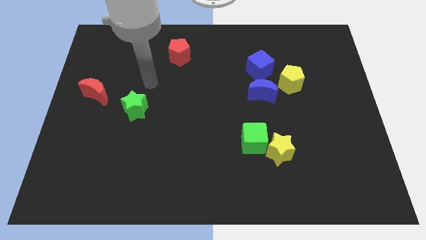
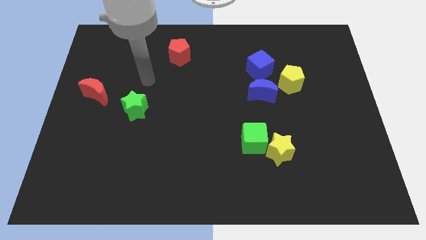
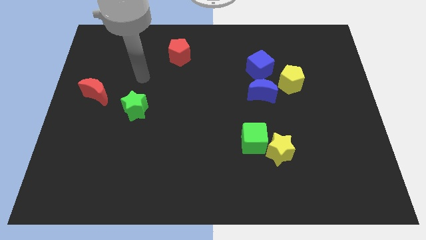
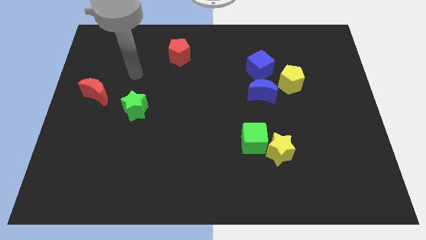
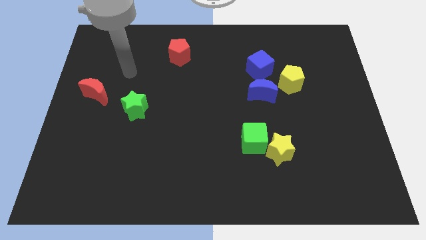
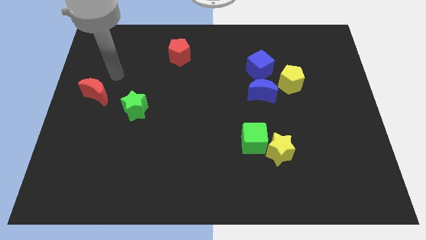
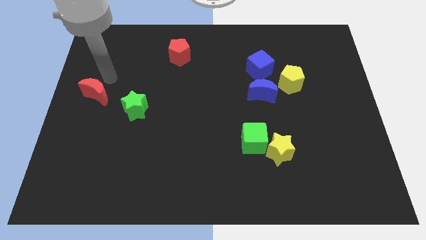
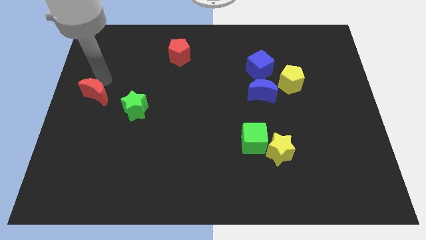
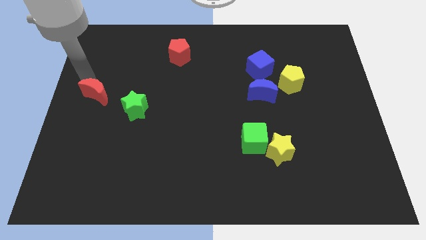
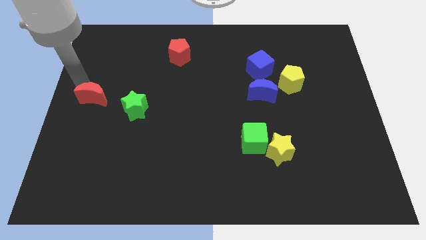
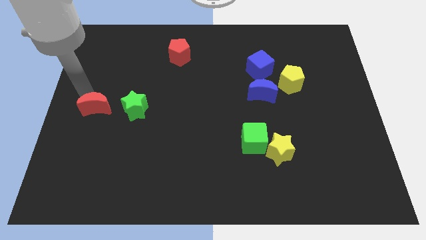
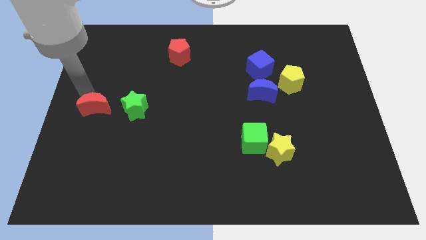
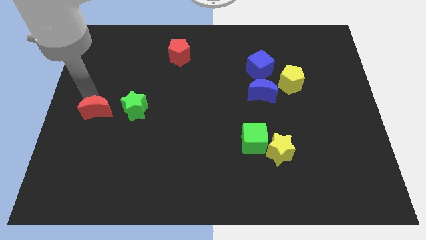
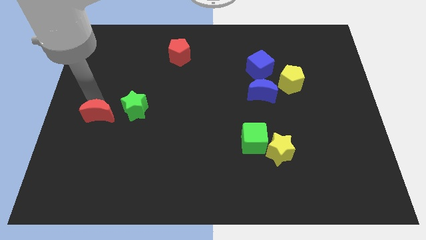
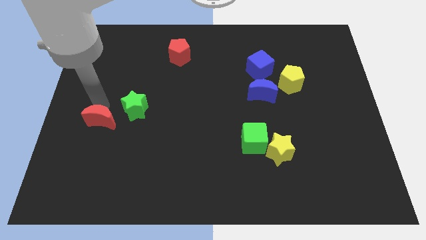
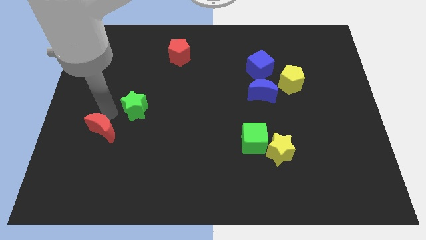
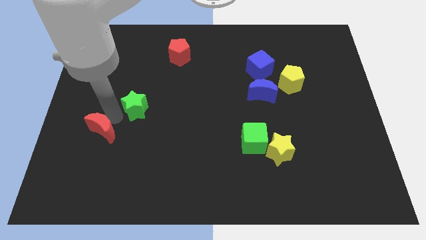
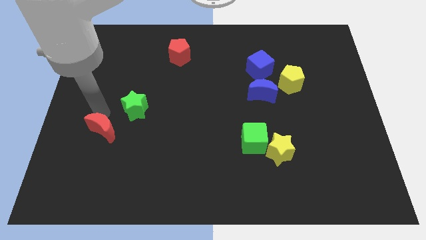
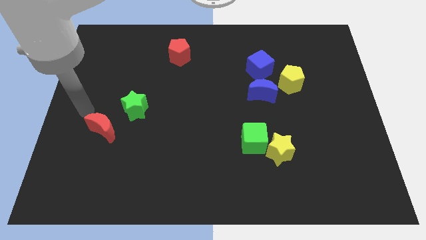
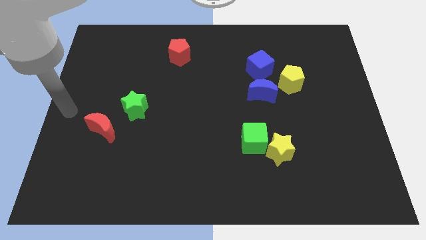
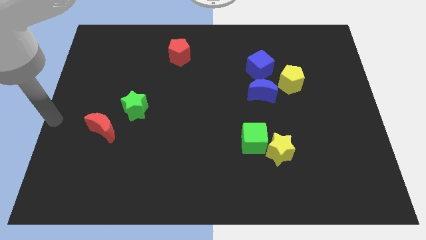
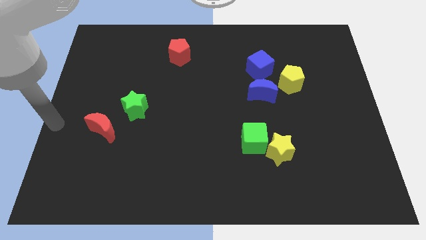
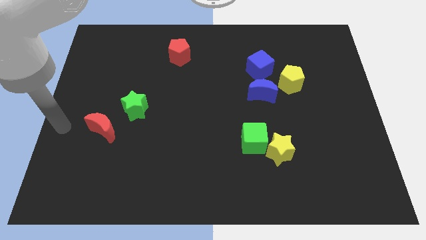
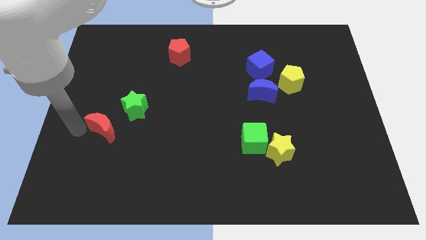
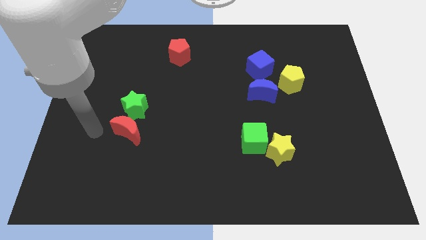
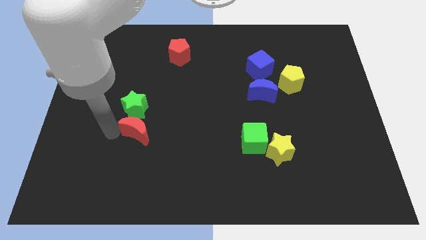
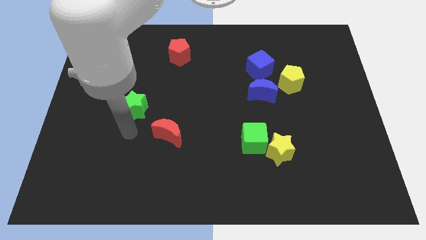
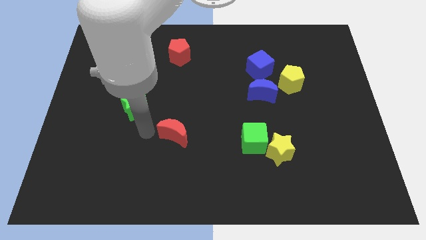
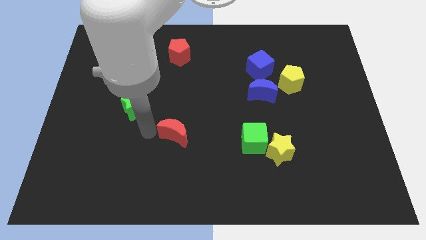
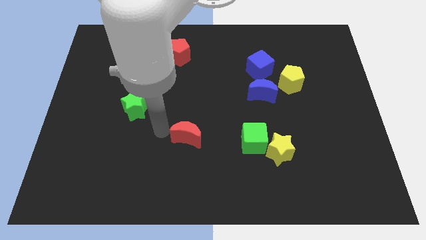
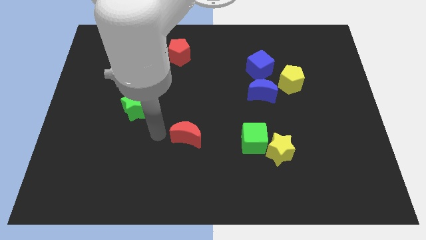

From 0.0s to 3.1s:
push red crescent below red pentagon

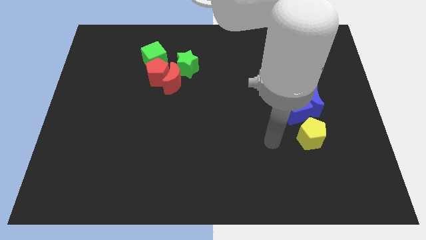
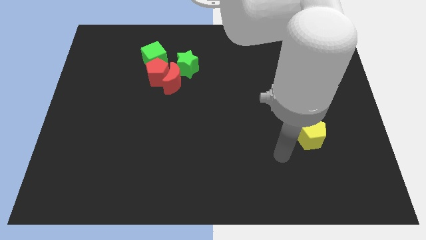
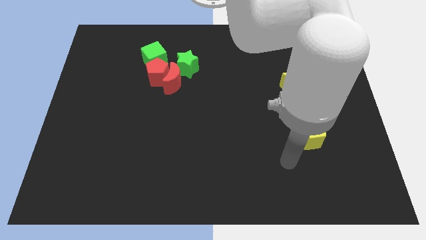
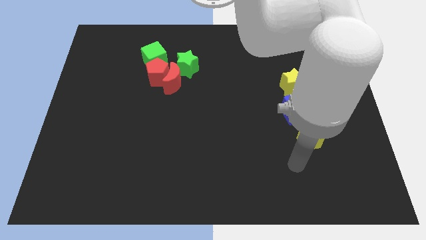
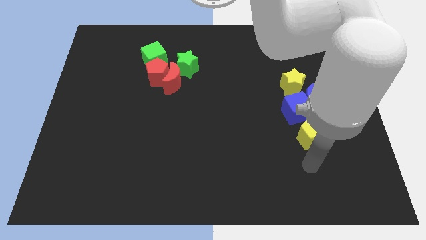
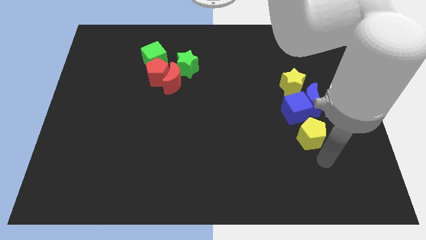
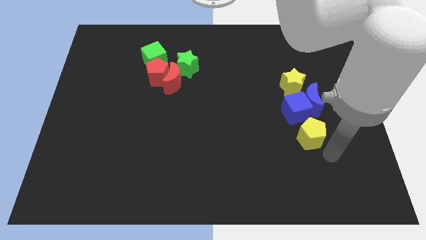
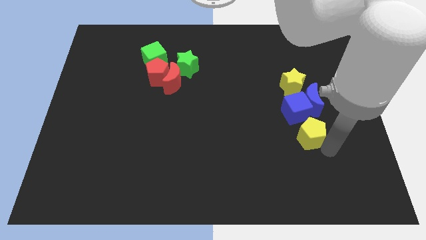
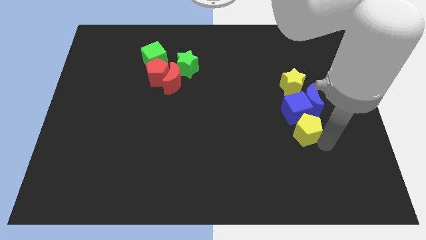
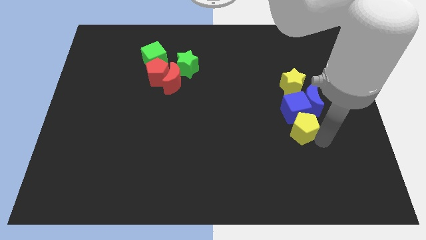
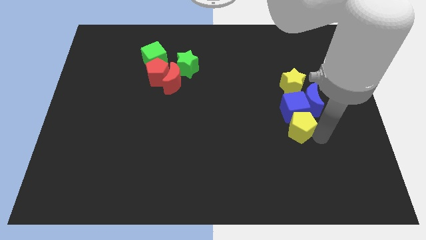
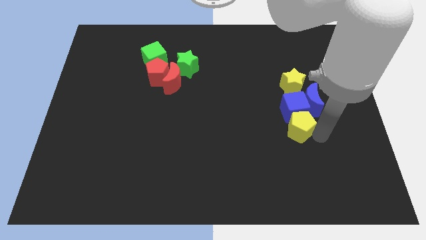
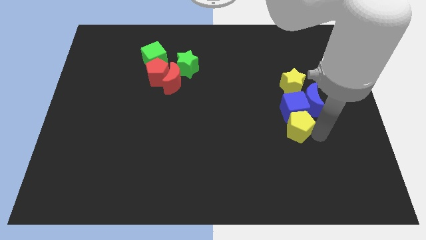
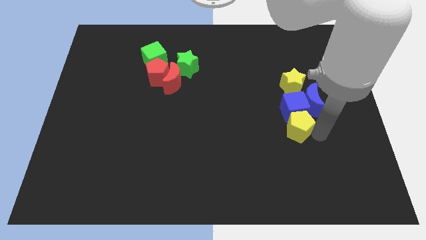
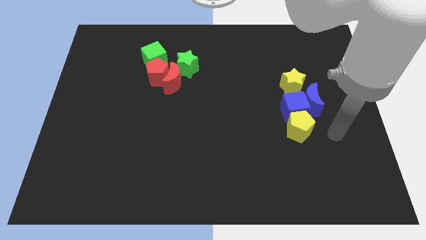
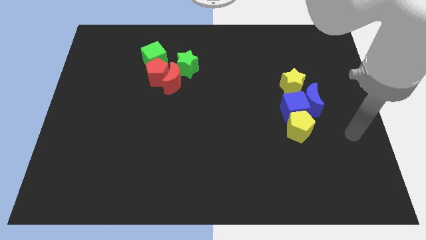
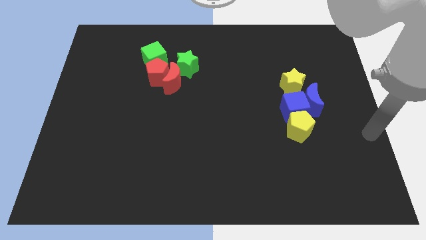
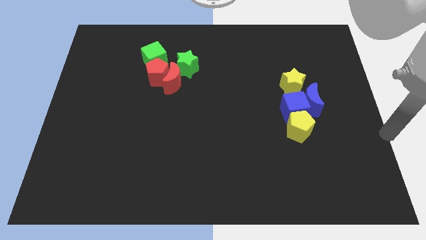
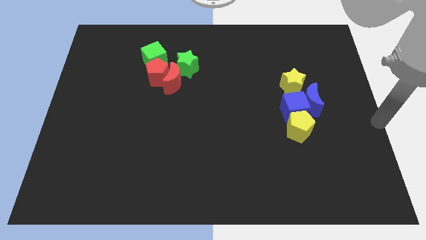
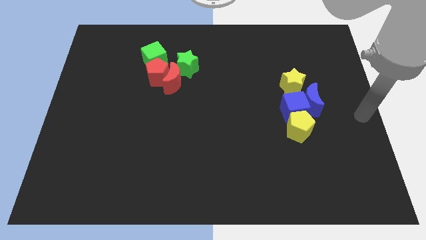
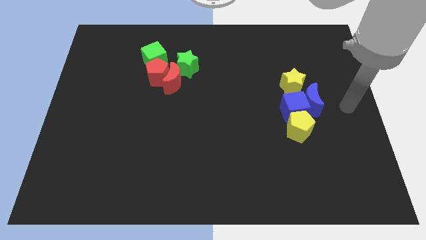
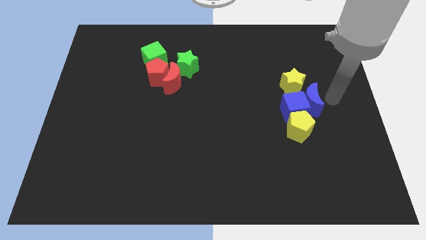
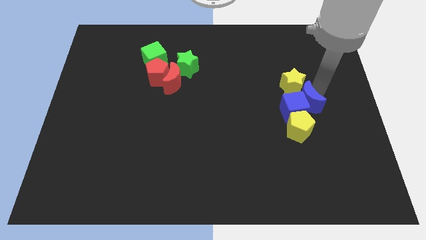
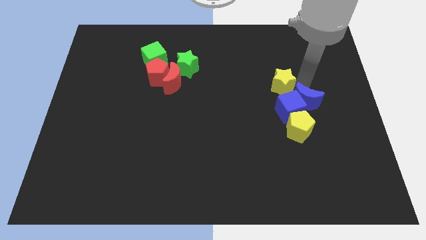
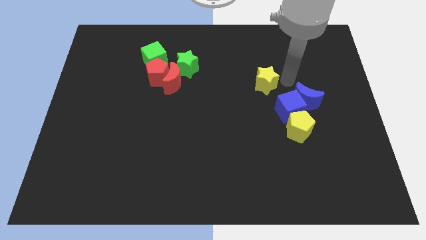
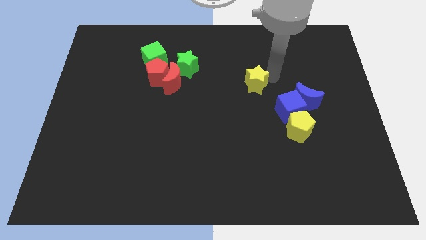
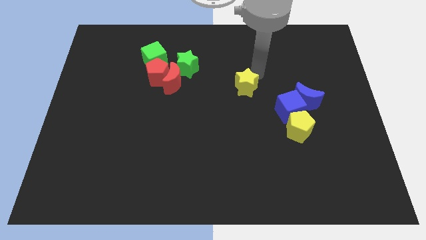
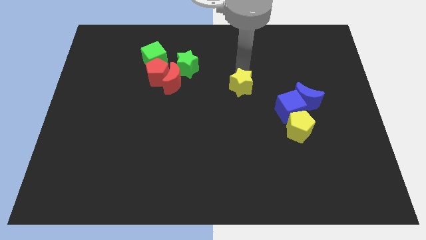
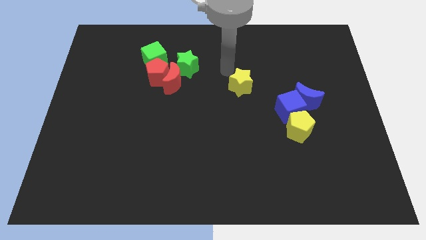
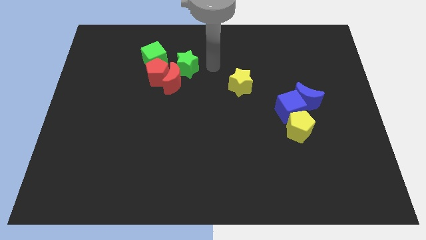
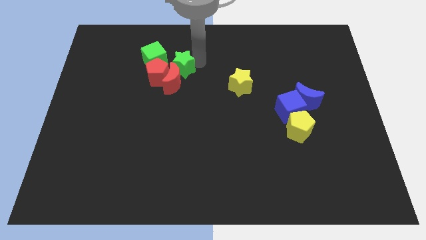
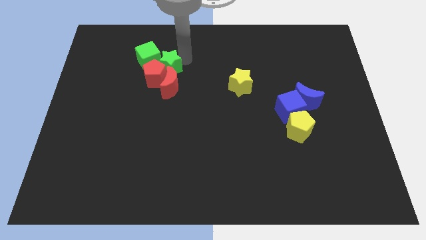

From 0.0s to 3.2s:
separate yellow star from the blue cube

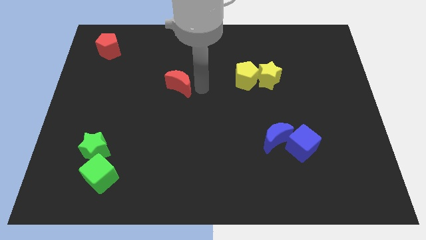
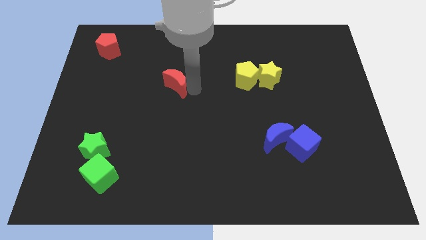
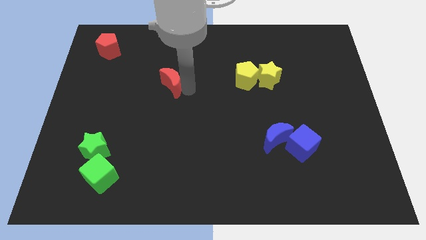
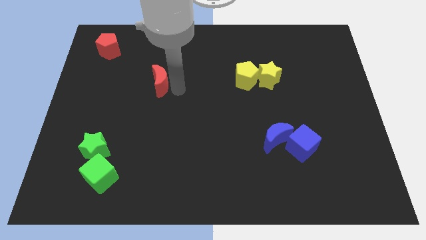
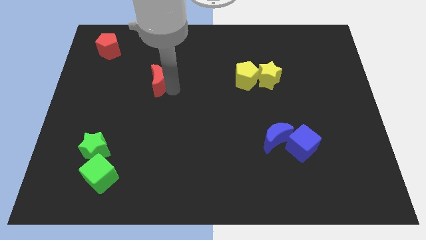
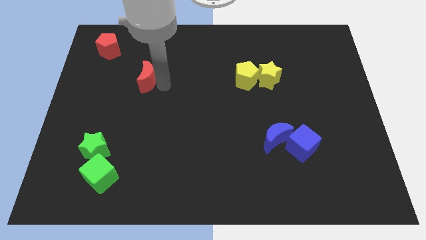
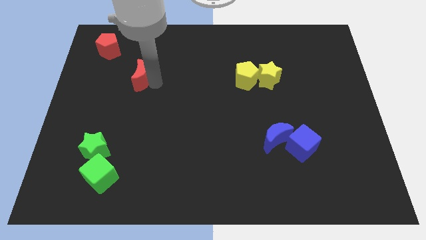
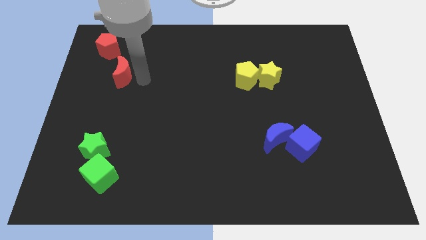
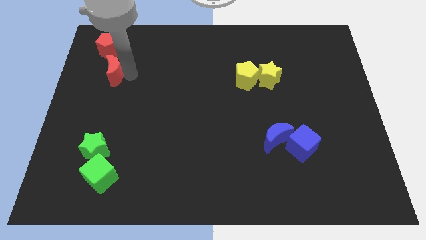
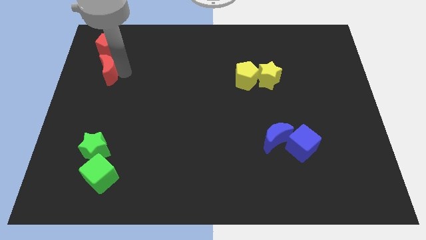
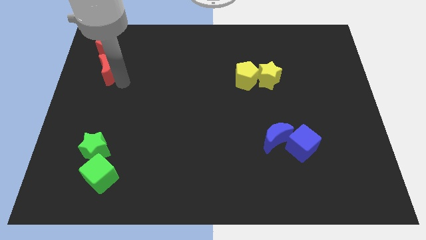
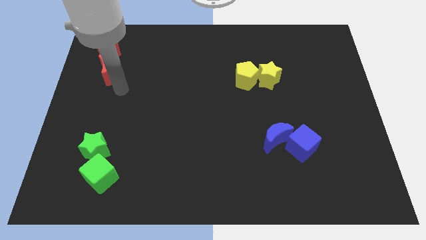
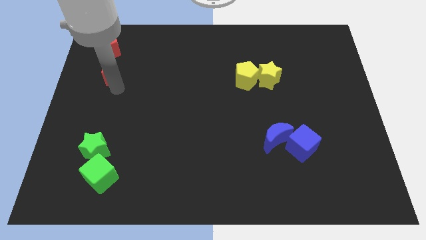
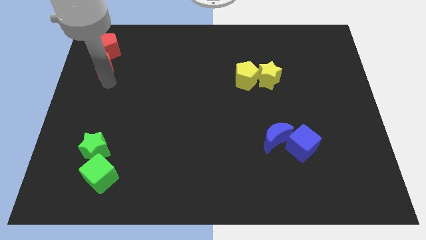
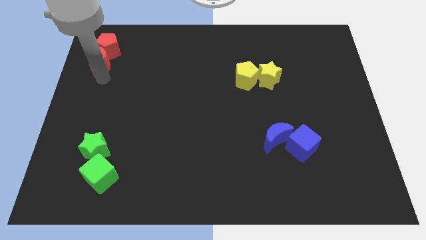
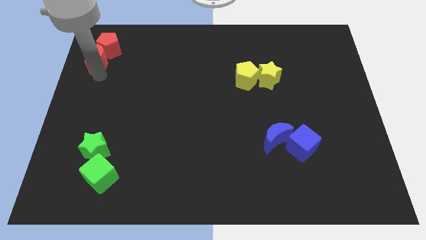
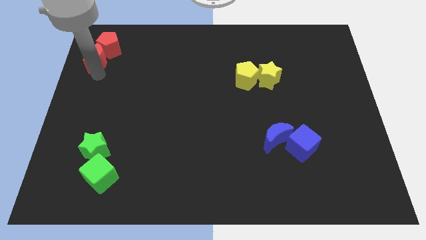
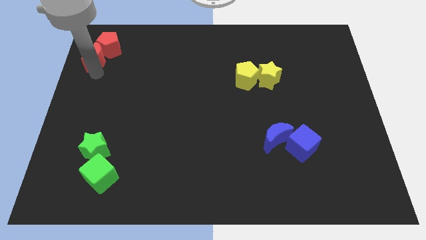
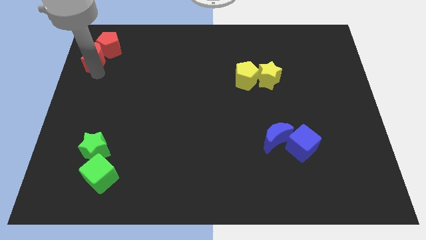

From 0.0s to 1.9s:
place the red crescent to the bottom of the red pentagon

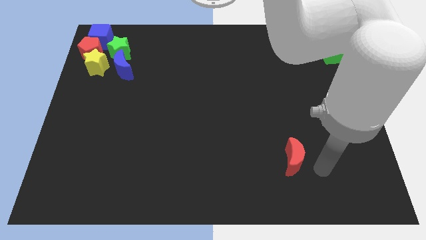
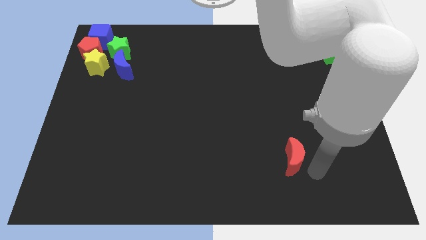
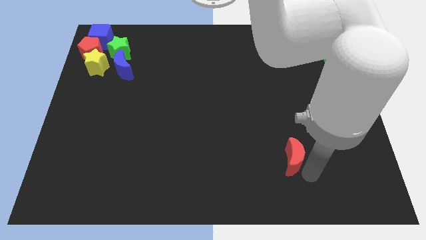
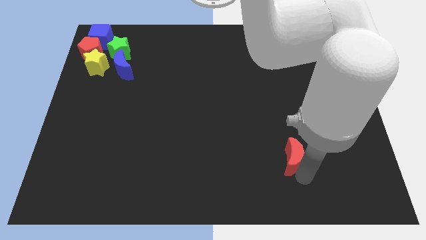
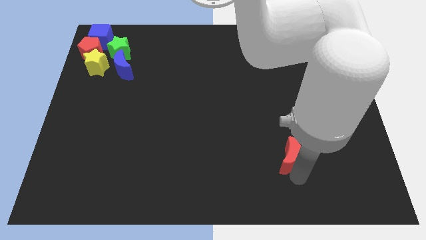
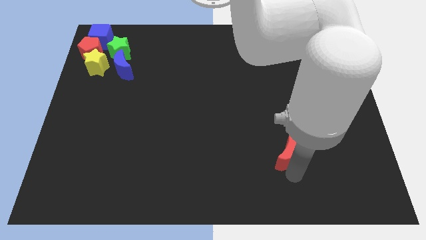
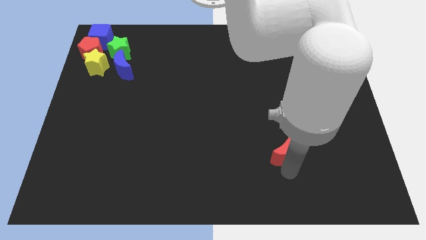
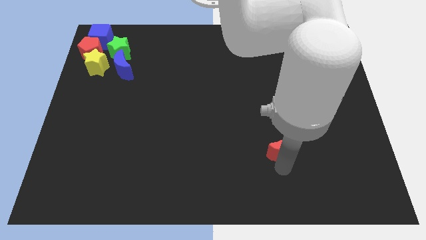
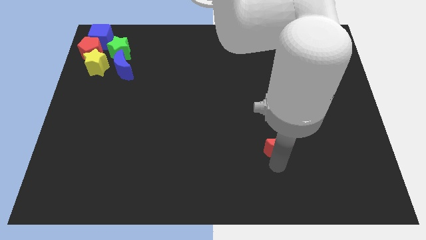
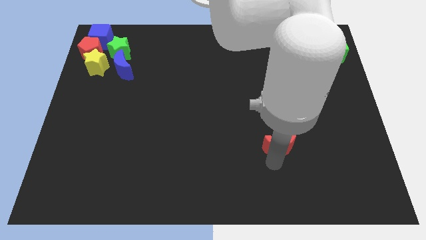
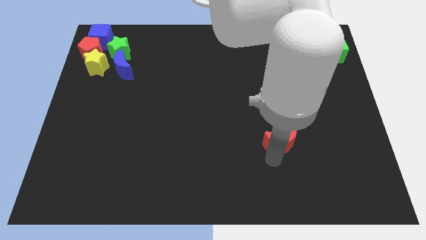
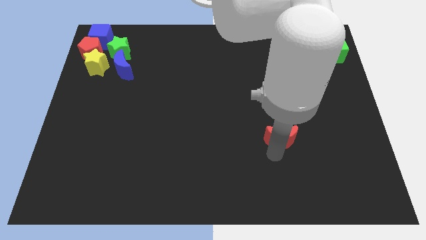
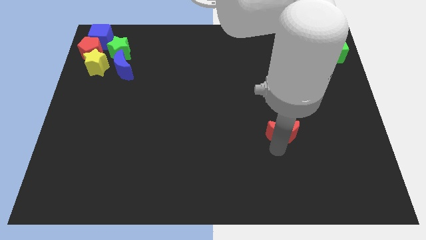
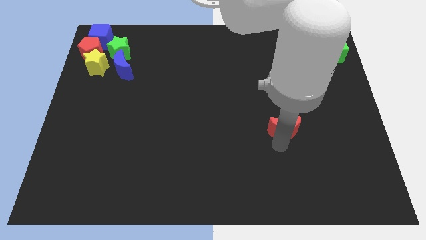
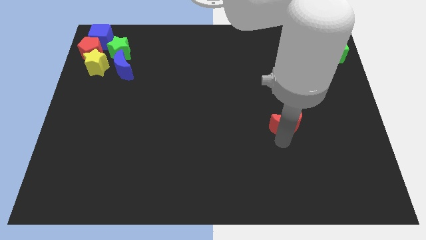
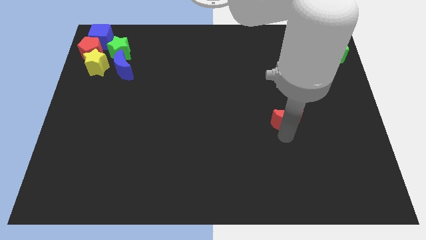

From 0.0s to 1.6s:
slide the red moon upwards
